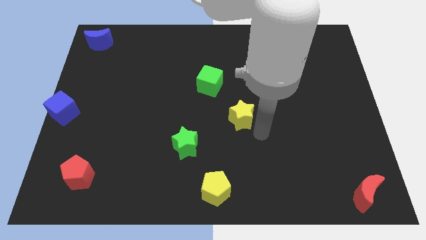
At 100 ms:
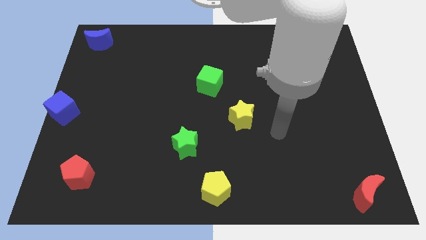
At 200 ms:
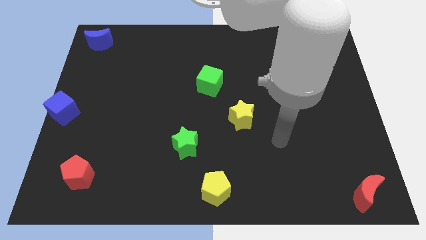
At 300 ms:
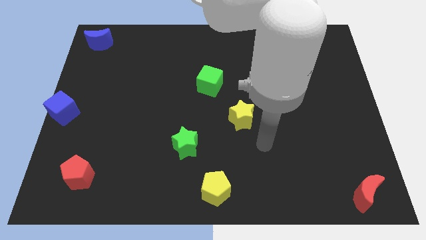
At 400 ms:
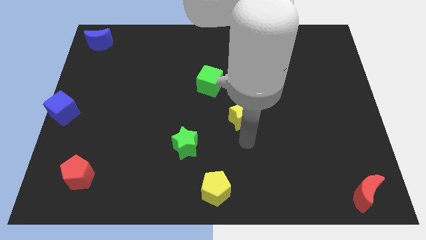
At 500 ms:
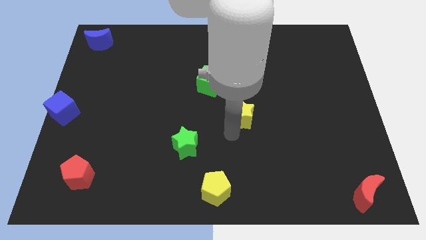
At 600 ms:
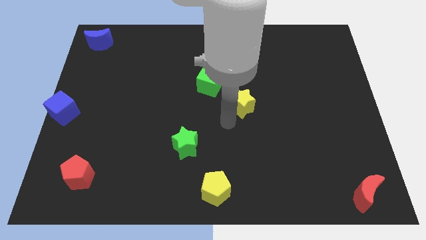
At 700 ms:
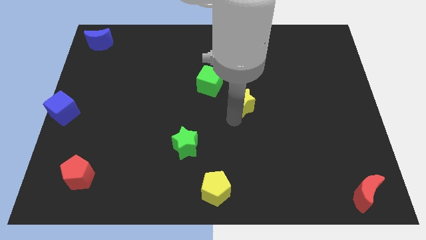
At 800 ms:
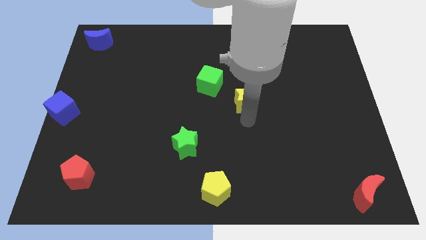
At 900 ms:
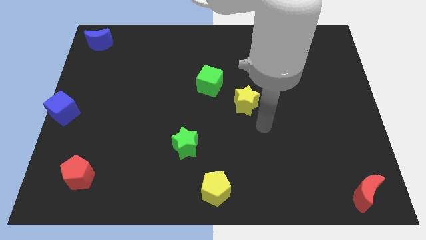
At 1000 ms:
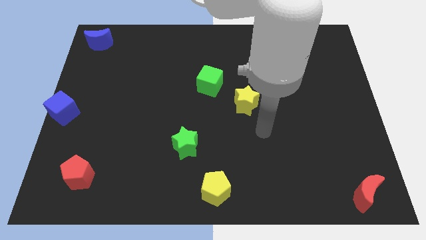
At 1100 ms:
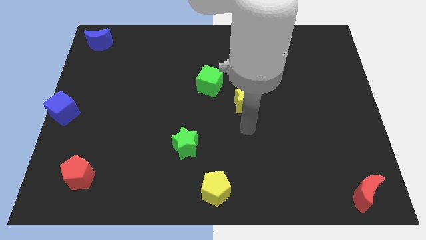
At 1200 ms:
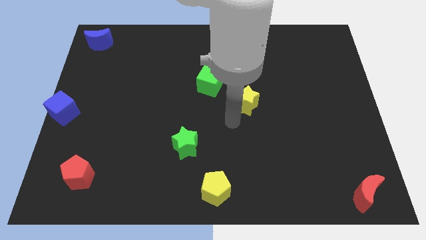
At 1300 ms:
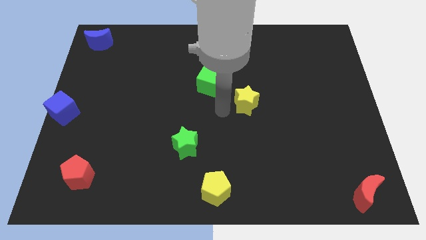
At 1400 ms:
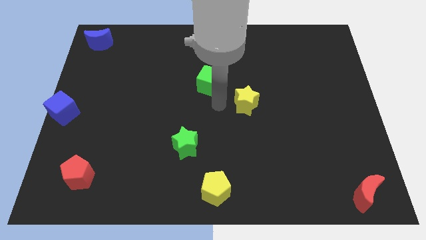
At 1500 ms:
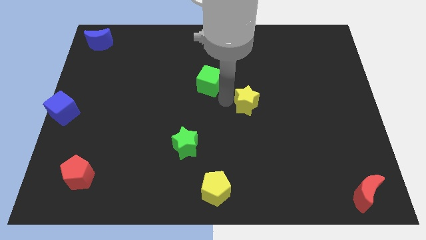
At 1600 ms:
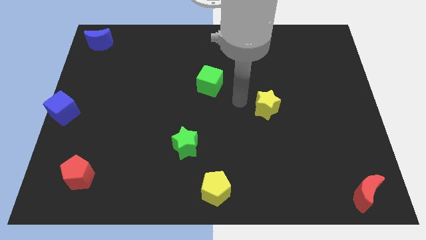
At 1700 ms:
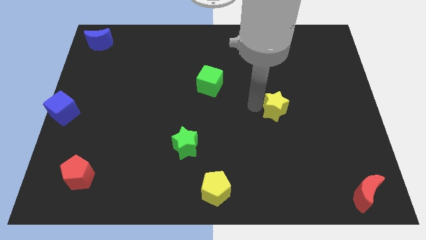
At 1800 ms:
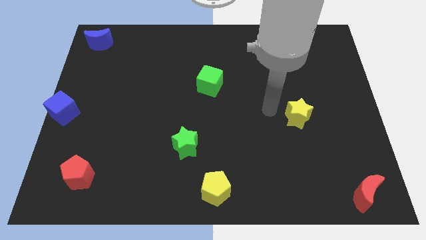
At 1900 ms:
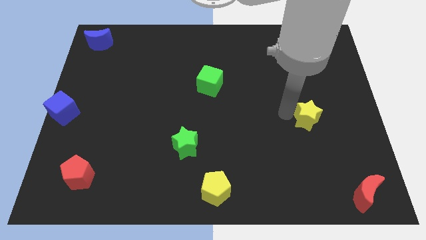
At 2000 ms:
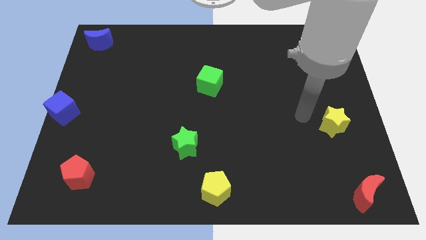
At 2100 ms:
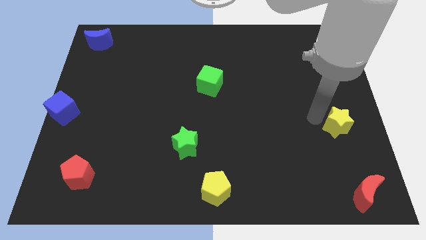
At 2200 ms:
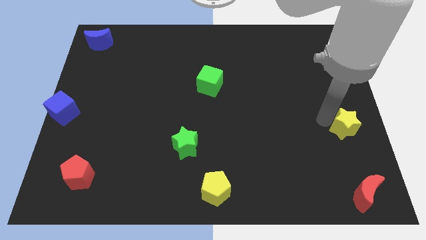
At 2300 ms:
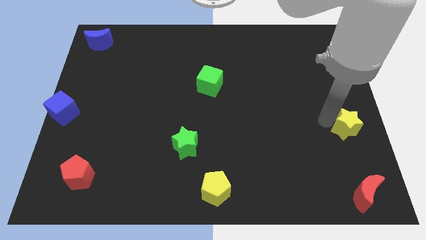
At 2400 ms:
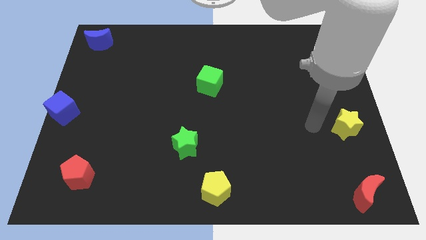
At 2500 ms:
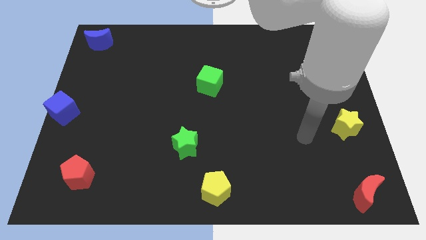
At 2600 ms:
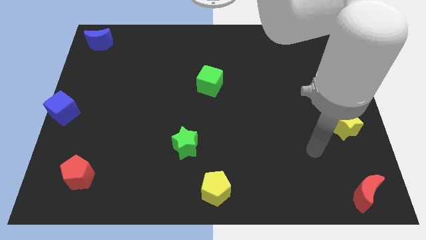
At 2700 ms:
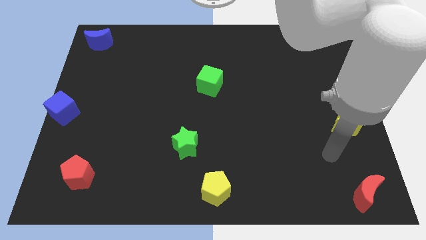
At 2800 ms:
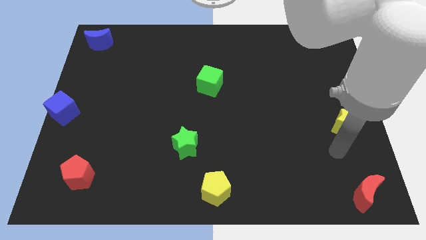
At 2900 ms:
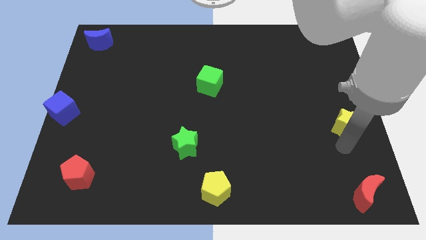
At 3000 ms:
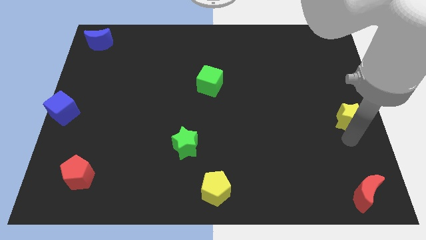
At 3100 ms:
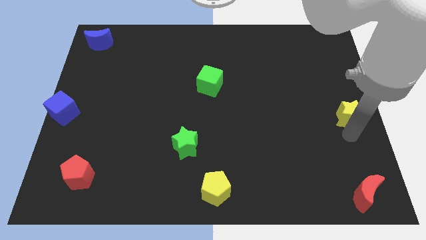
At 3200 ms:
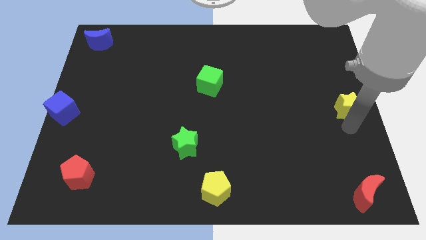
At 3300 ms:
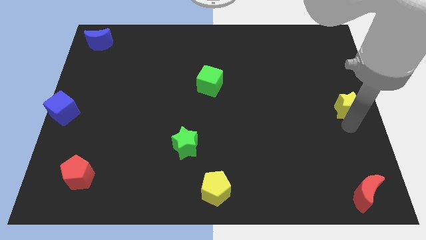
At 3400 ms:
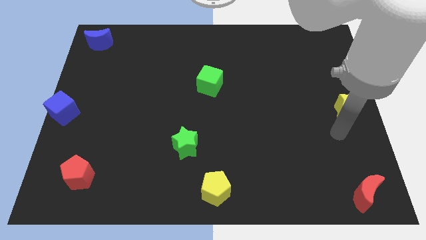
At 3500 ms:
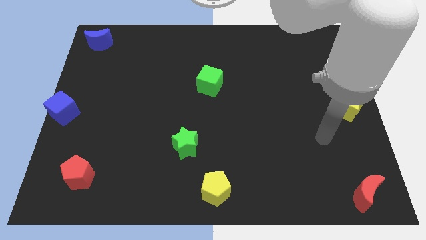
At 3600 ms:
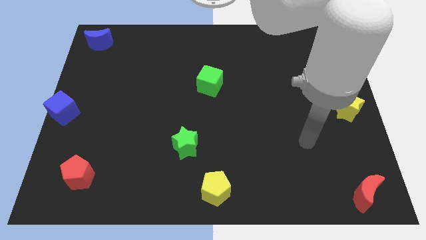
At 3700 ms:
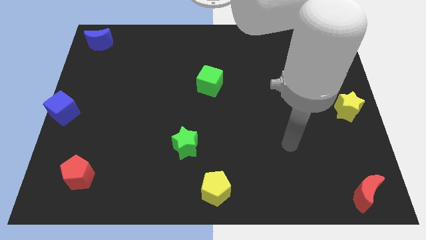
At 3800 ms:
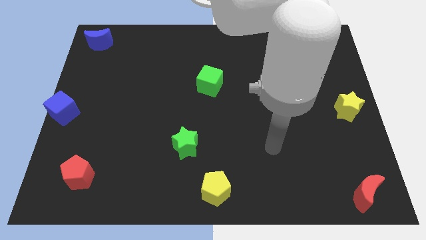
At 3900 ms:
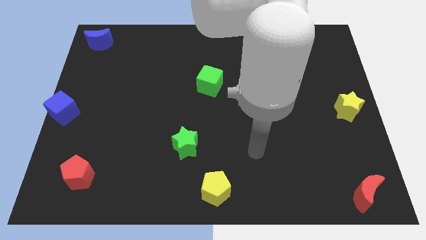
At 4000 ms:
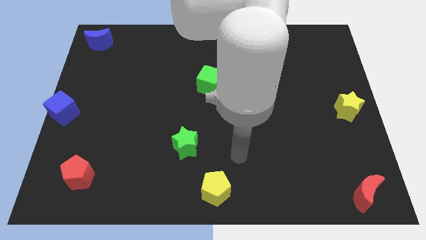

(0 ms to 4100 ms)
push yellow star to the center right

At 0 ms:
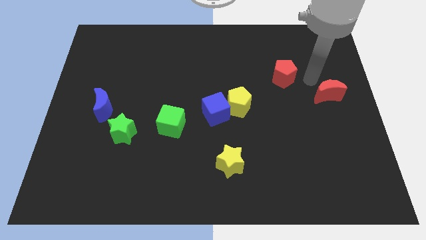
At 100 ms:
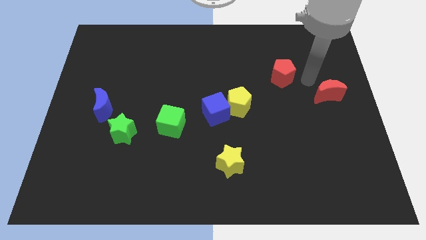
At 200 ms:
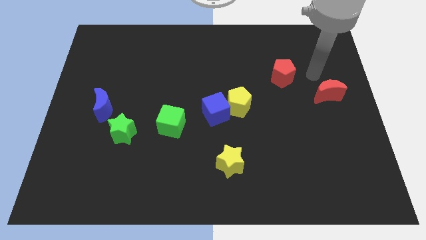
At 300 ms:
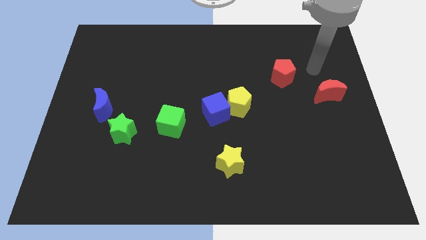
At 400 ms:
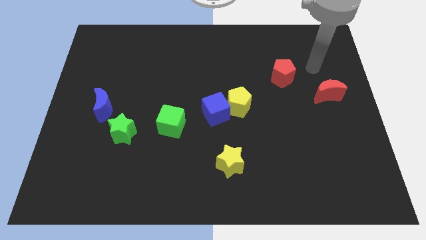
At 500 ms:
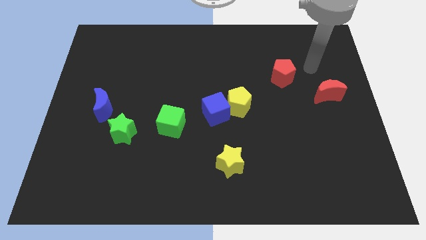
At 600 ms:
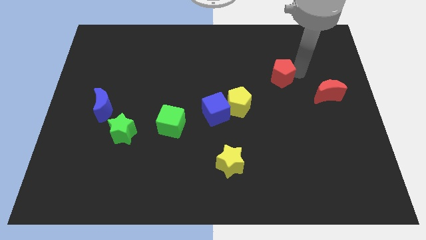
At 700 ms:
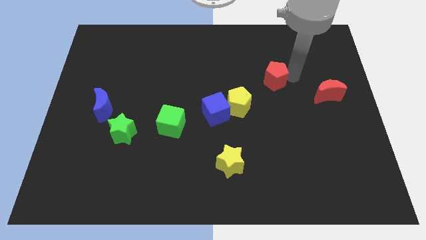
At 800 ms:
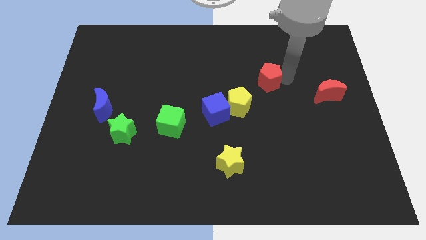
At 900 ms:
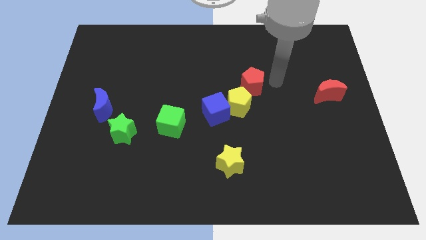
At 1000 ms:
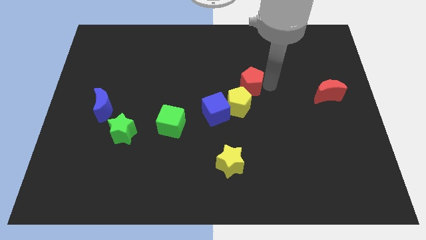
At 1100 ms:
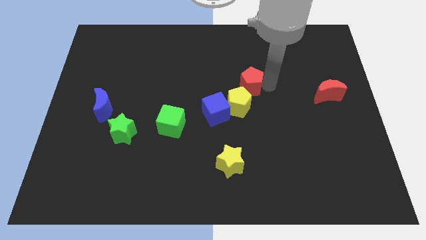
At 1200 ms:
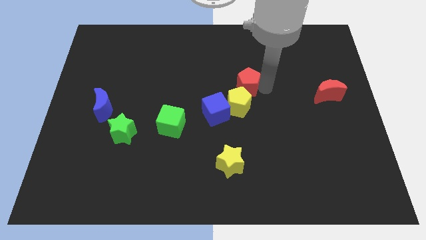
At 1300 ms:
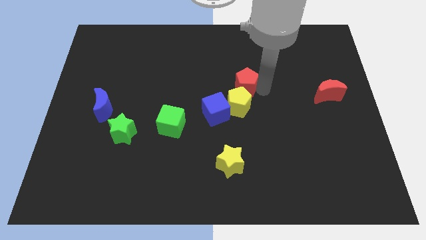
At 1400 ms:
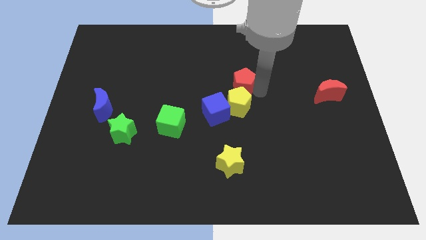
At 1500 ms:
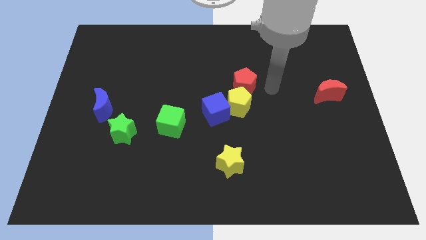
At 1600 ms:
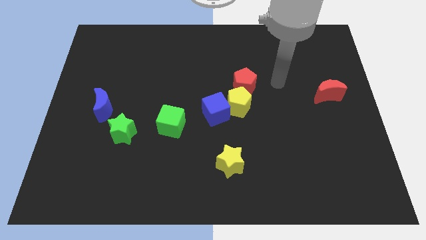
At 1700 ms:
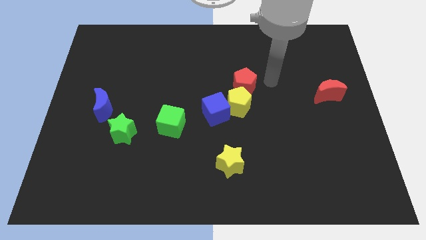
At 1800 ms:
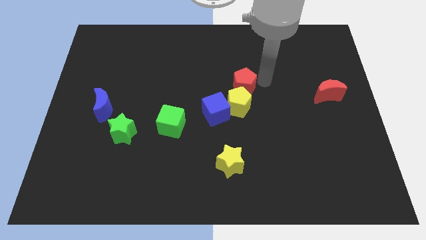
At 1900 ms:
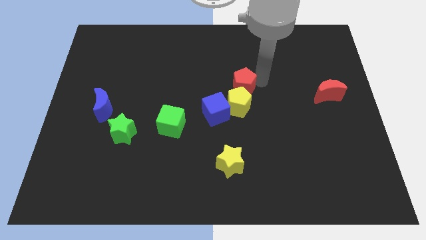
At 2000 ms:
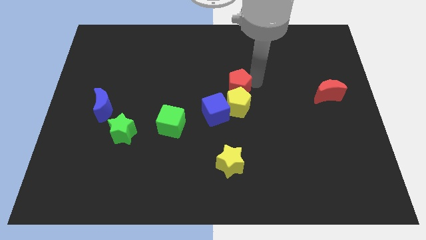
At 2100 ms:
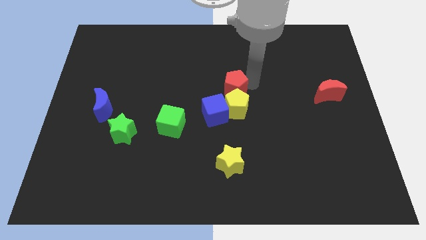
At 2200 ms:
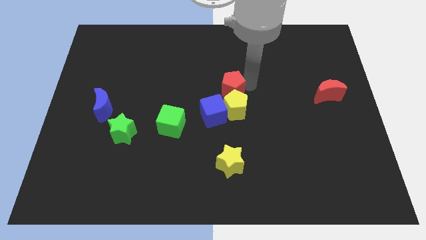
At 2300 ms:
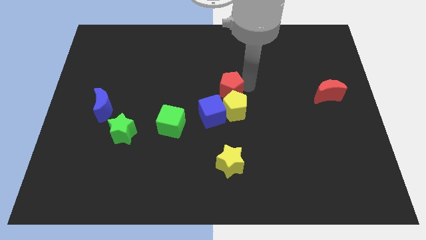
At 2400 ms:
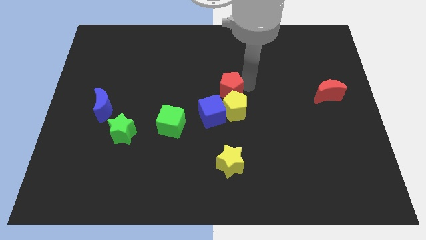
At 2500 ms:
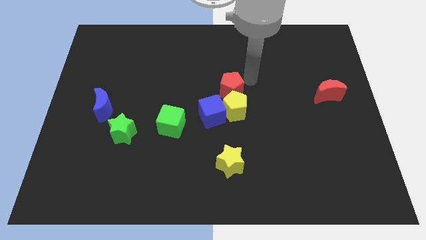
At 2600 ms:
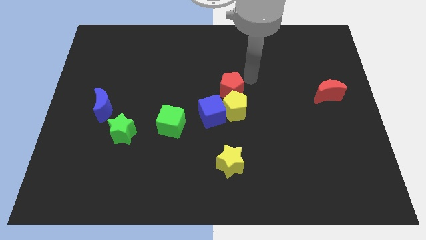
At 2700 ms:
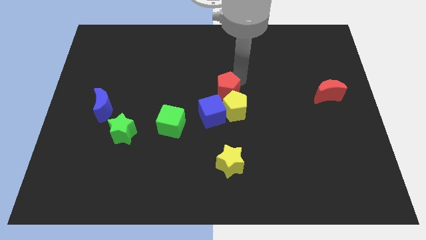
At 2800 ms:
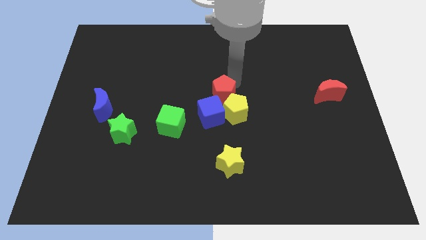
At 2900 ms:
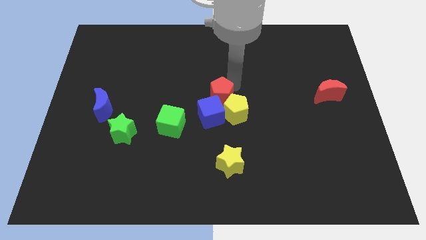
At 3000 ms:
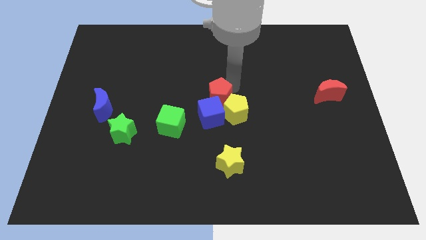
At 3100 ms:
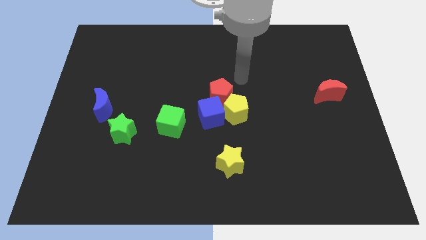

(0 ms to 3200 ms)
push the red pentagon into the blue cube and yellow pentagon

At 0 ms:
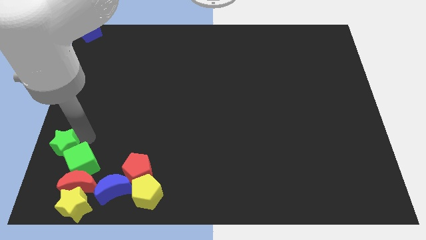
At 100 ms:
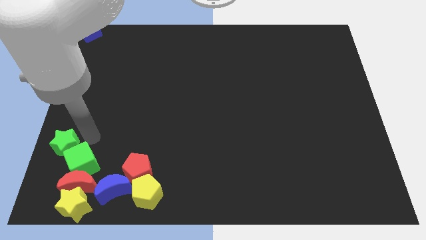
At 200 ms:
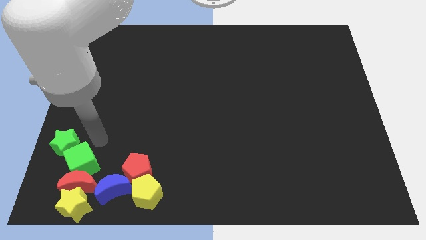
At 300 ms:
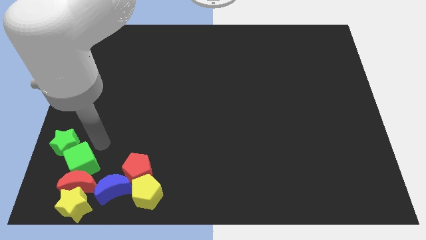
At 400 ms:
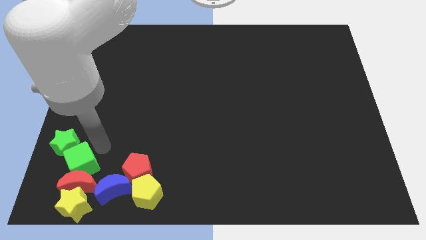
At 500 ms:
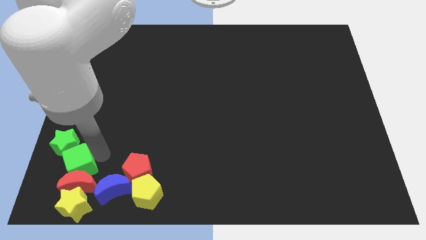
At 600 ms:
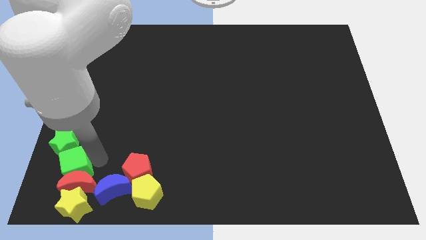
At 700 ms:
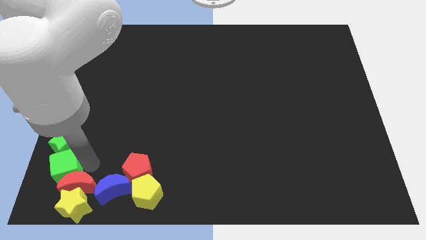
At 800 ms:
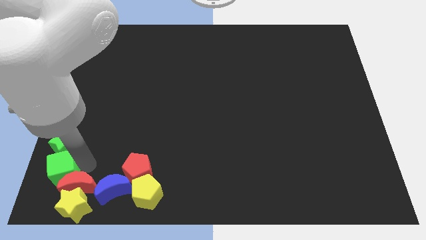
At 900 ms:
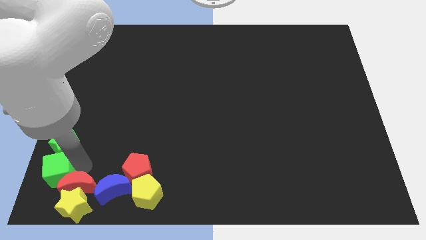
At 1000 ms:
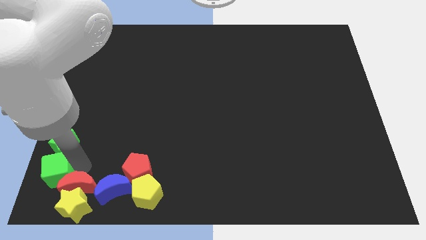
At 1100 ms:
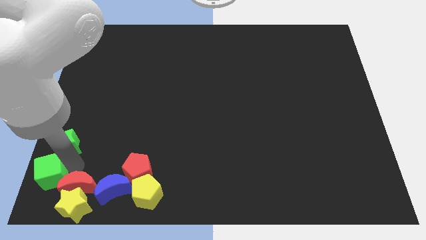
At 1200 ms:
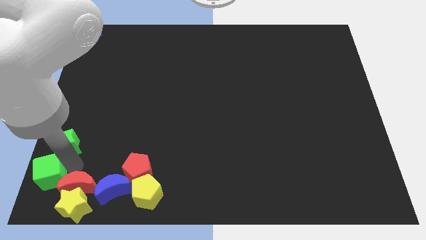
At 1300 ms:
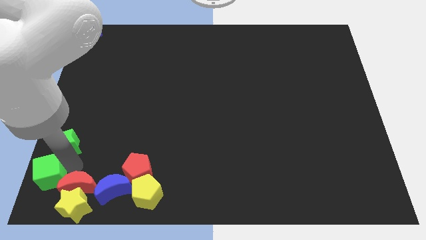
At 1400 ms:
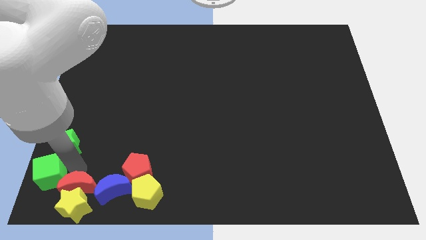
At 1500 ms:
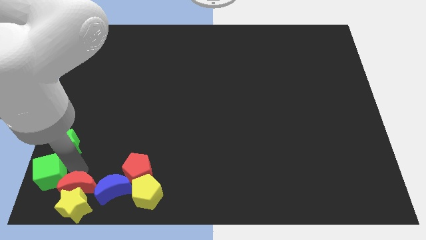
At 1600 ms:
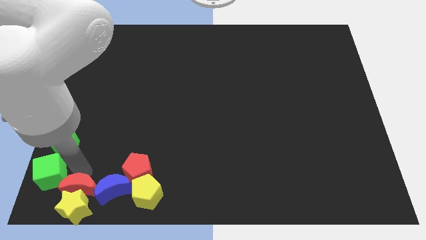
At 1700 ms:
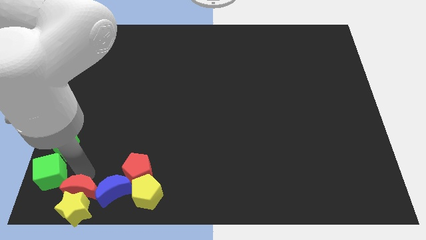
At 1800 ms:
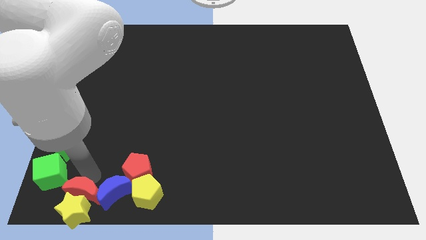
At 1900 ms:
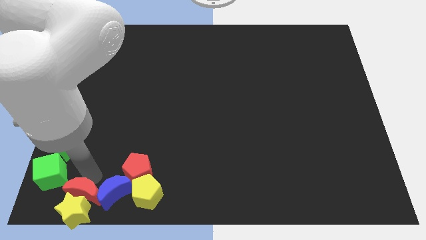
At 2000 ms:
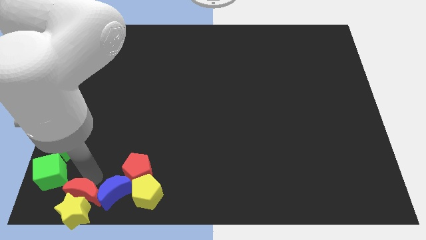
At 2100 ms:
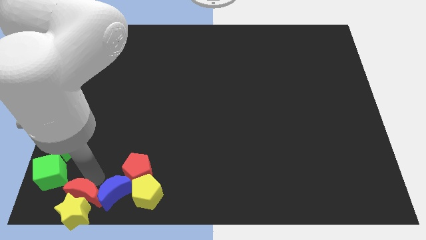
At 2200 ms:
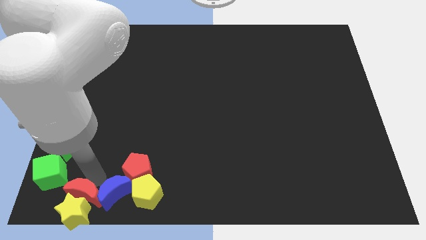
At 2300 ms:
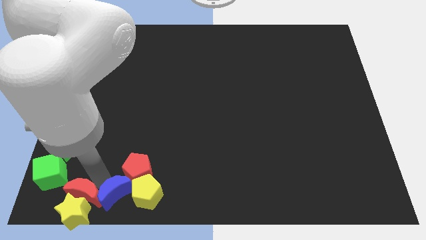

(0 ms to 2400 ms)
push a group of blocks to the bottom left corner of the board
